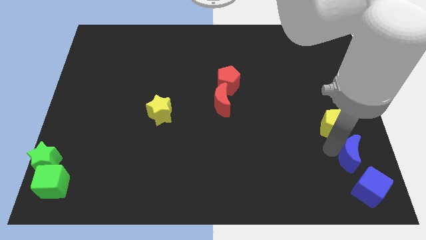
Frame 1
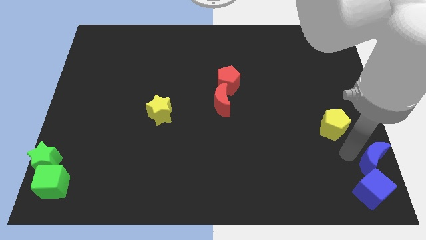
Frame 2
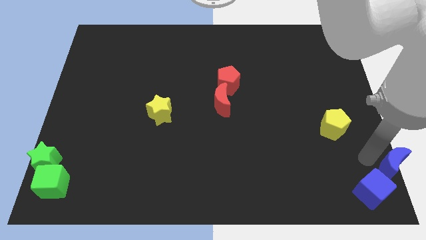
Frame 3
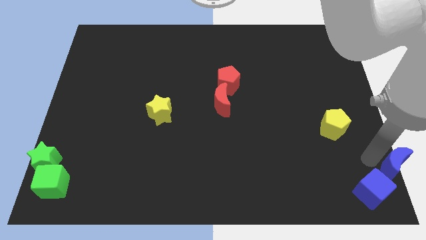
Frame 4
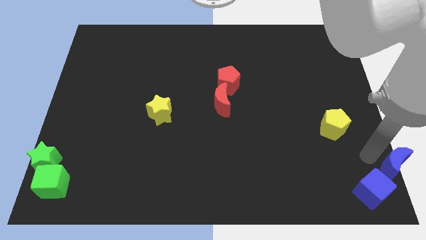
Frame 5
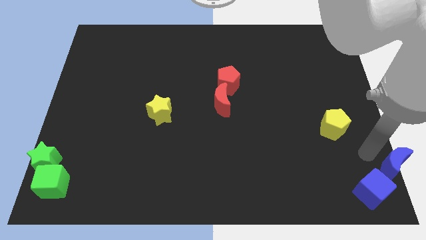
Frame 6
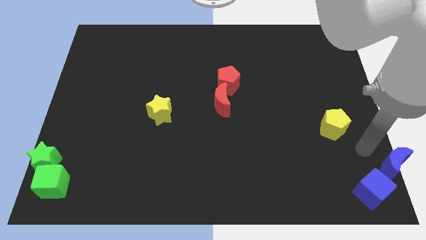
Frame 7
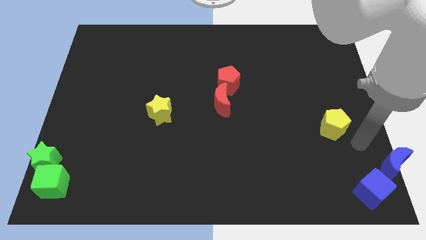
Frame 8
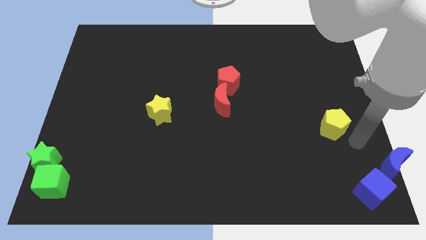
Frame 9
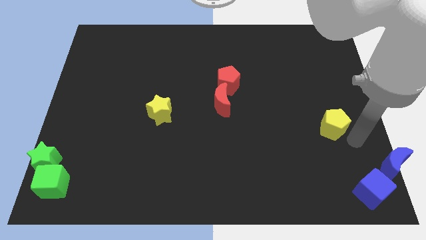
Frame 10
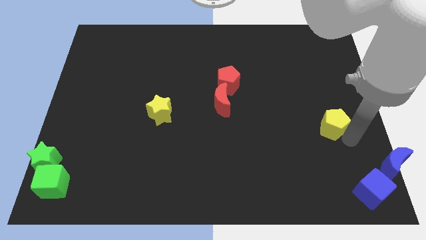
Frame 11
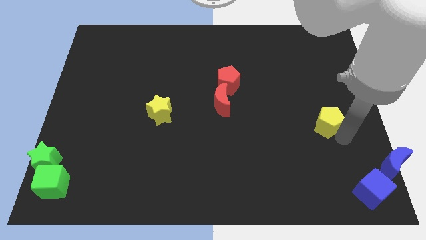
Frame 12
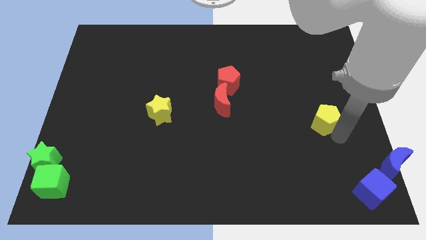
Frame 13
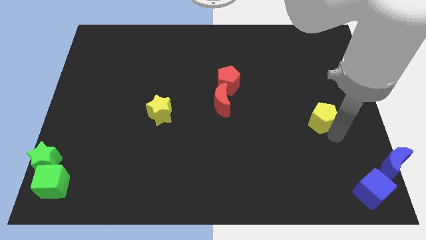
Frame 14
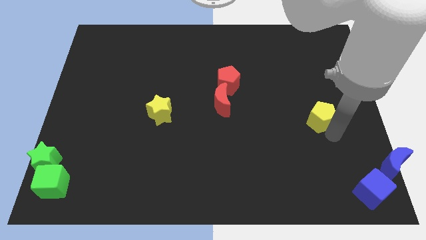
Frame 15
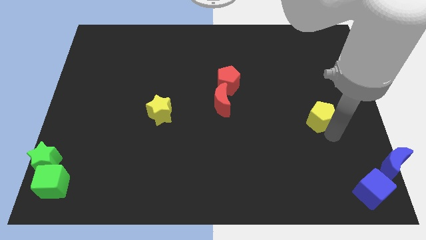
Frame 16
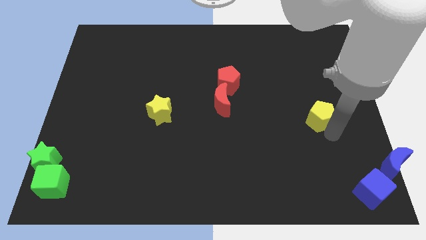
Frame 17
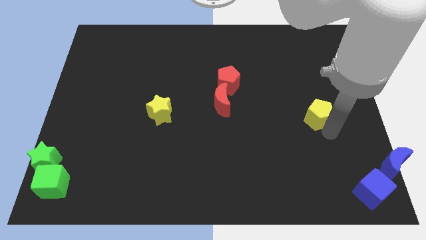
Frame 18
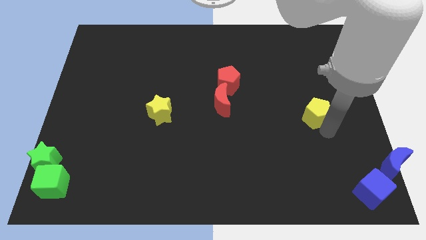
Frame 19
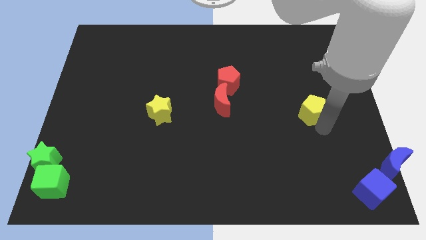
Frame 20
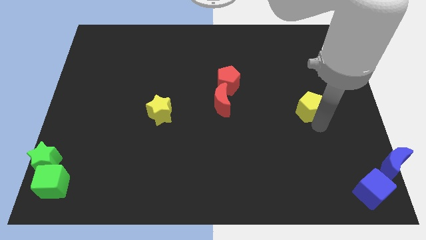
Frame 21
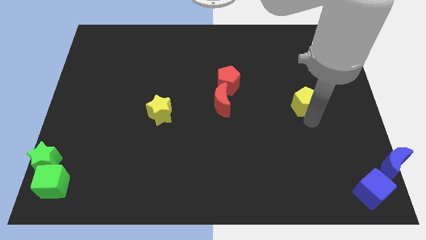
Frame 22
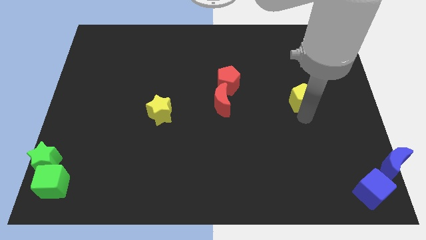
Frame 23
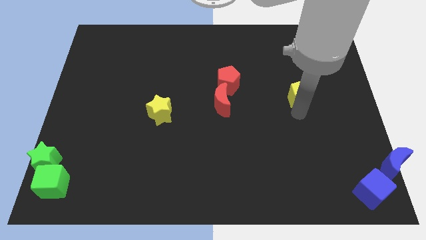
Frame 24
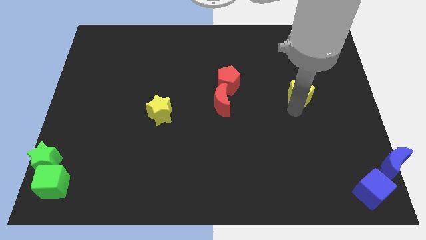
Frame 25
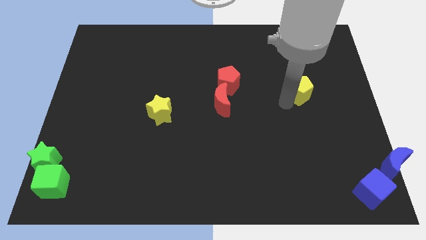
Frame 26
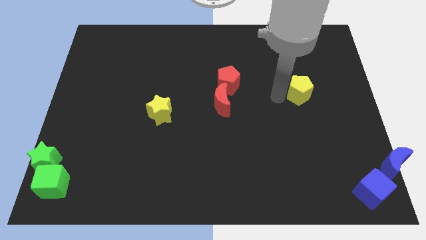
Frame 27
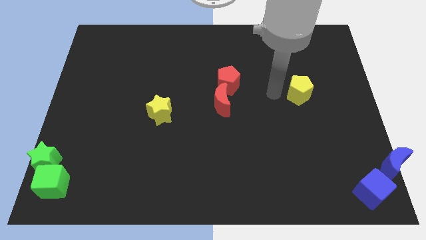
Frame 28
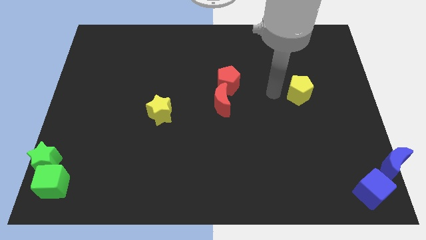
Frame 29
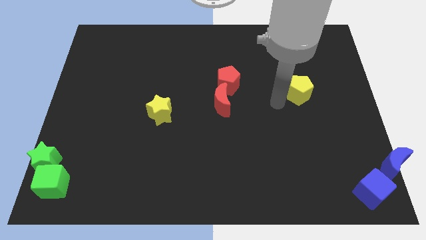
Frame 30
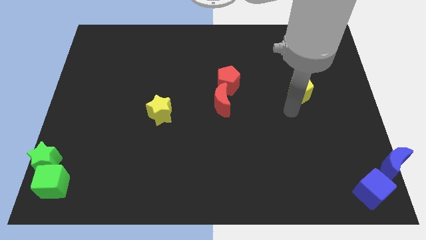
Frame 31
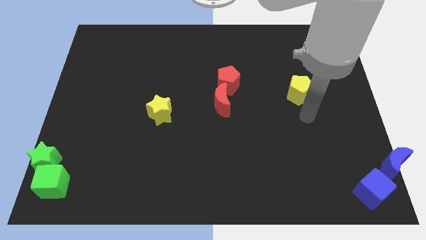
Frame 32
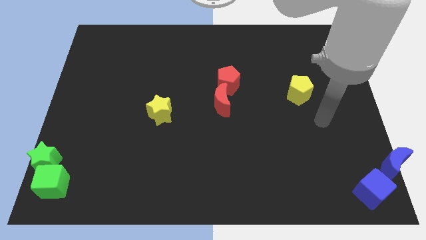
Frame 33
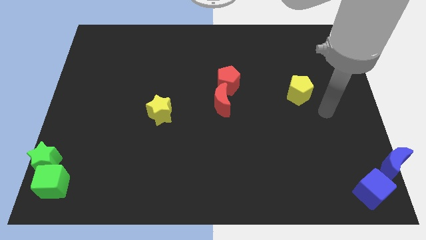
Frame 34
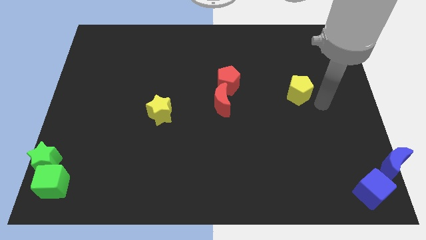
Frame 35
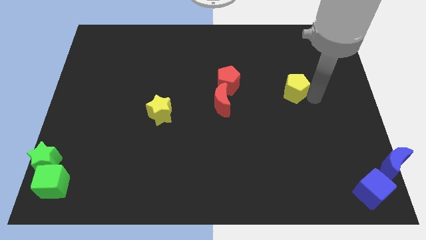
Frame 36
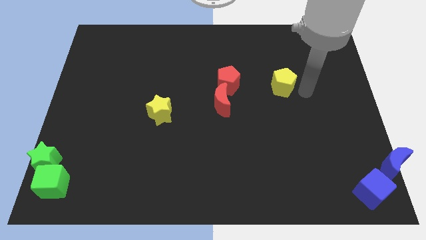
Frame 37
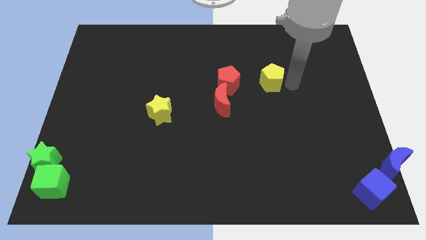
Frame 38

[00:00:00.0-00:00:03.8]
place the yellow pentagon parallel to red pentagon

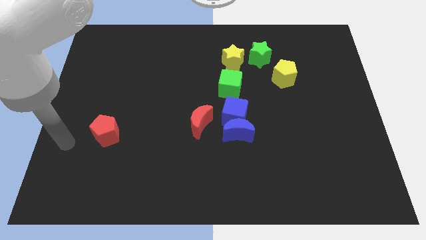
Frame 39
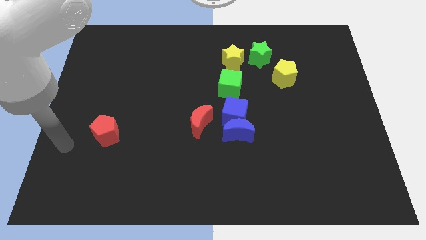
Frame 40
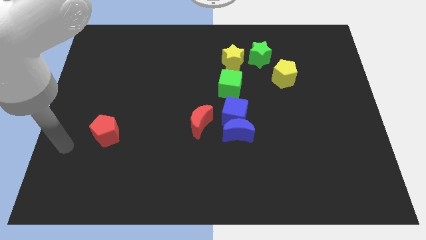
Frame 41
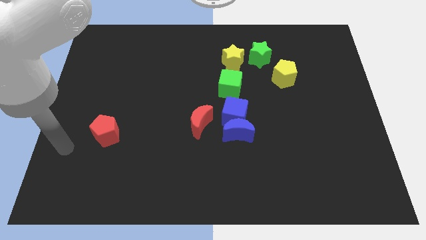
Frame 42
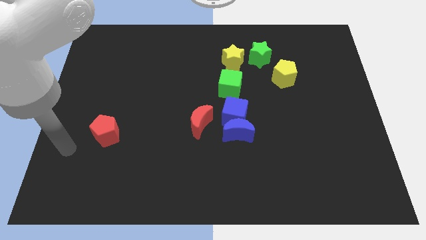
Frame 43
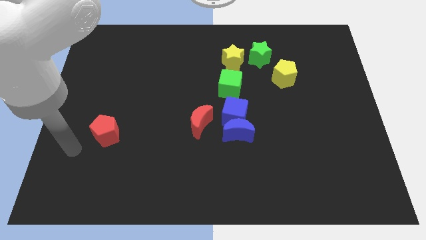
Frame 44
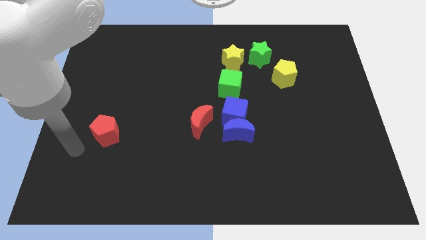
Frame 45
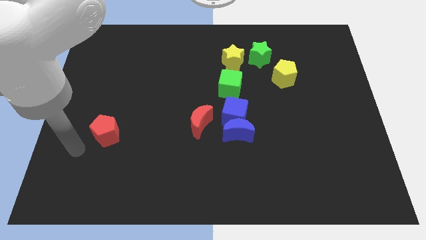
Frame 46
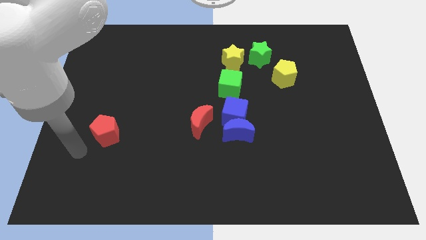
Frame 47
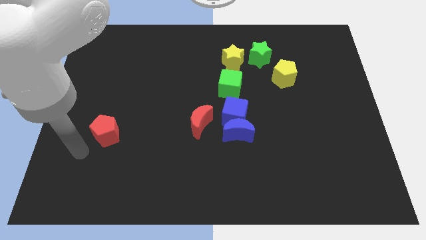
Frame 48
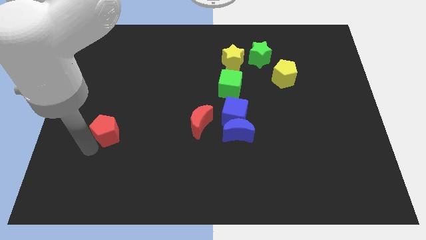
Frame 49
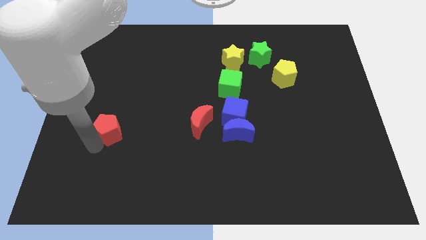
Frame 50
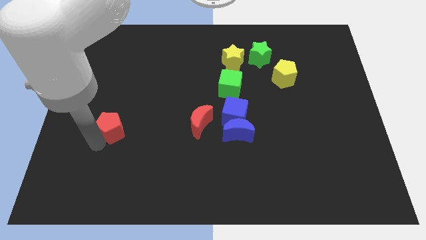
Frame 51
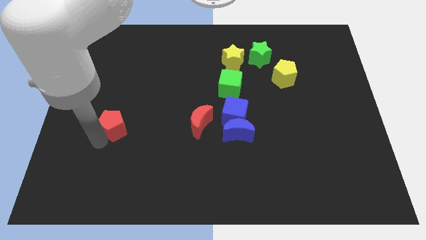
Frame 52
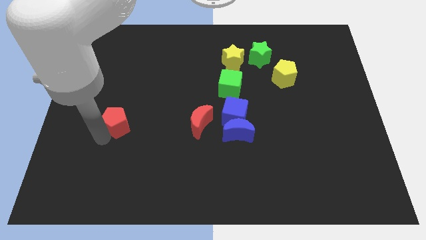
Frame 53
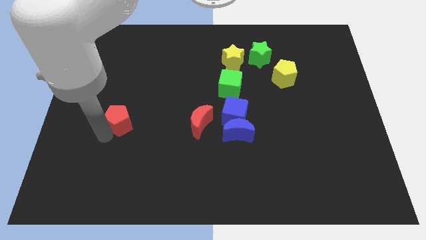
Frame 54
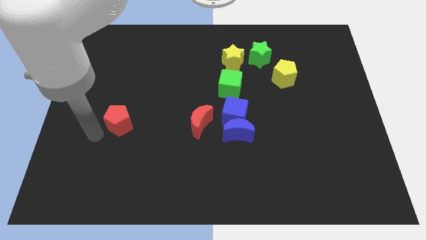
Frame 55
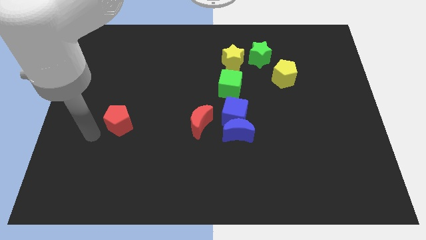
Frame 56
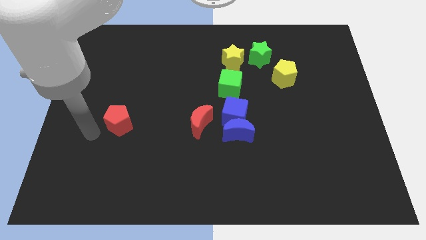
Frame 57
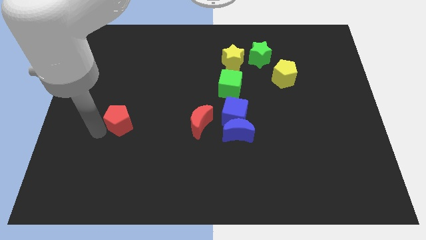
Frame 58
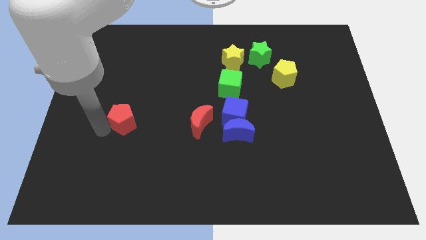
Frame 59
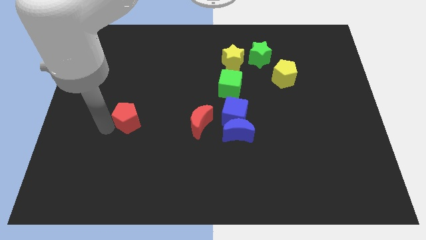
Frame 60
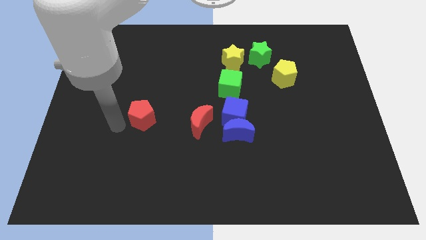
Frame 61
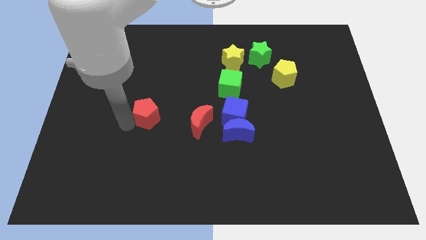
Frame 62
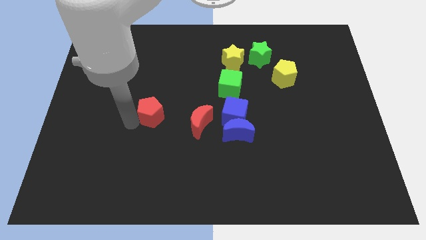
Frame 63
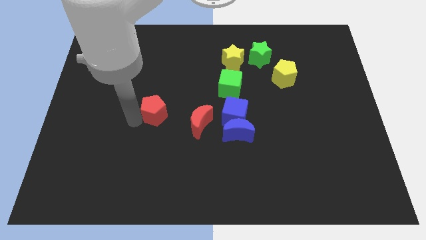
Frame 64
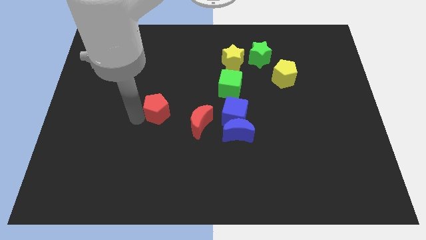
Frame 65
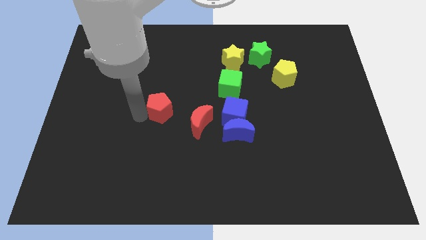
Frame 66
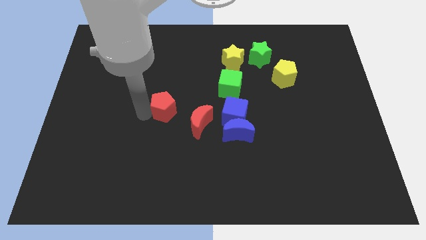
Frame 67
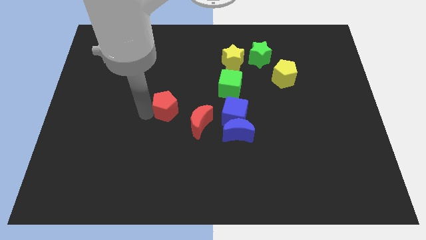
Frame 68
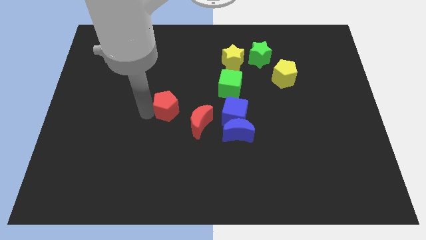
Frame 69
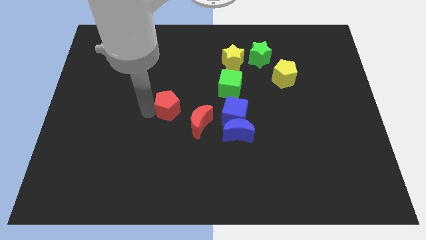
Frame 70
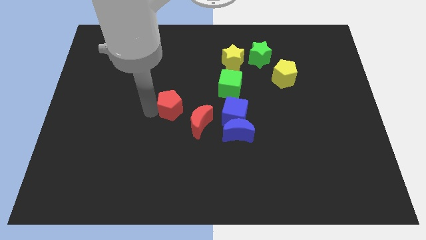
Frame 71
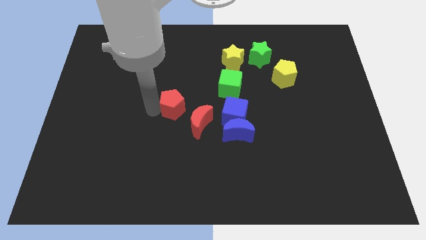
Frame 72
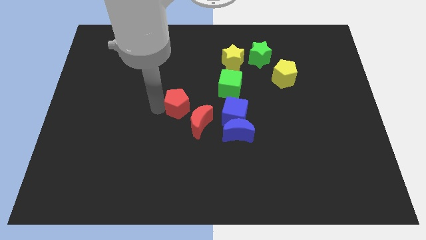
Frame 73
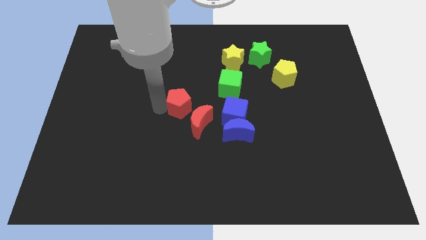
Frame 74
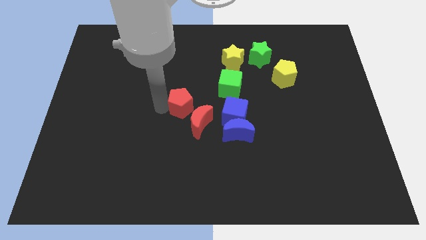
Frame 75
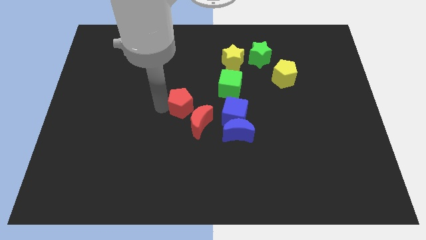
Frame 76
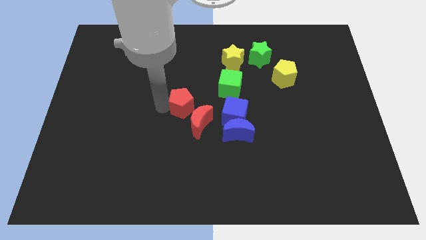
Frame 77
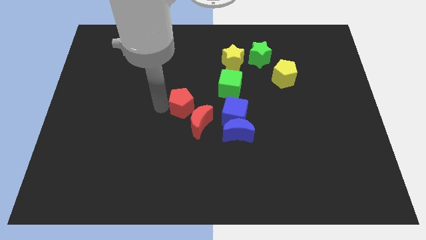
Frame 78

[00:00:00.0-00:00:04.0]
move the red pentagon to the top left of the red crescent

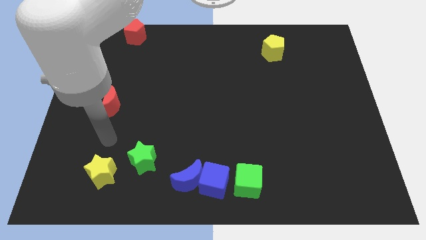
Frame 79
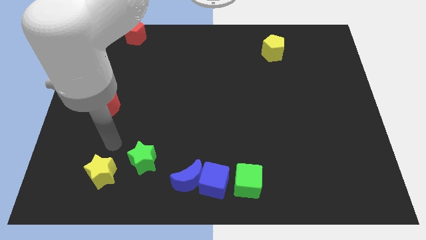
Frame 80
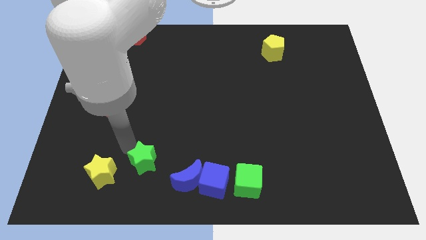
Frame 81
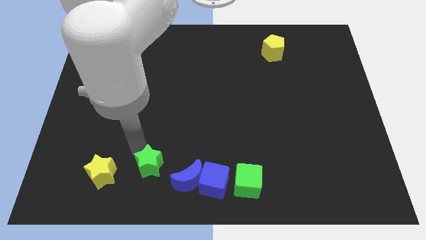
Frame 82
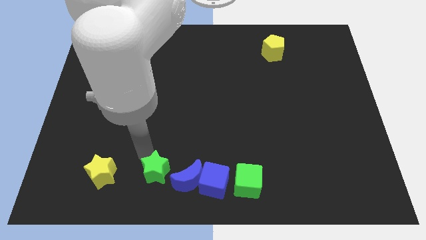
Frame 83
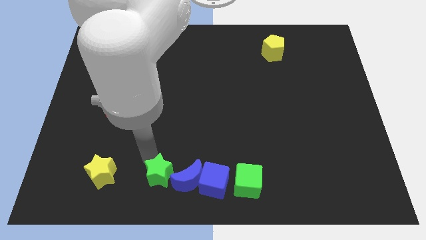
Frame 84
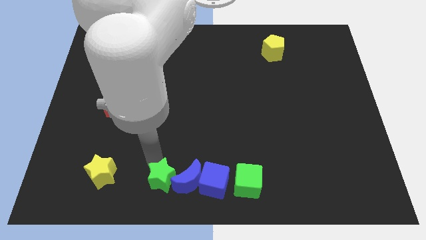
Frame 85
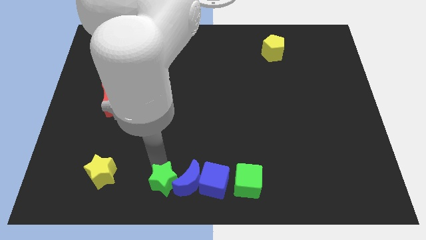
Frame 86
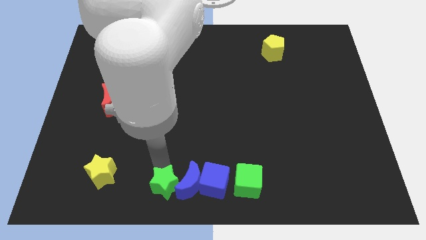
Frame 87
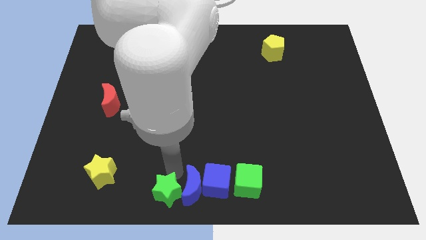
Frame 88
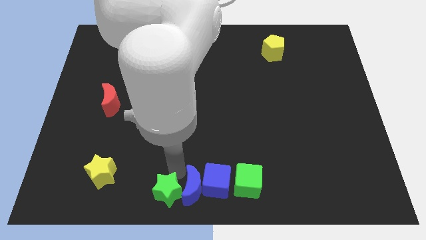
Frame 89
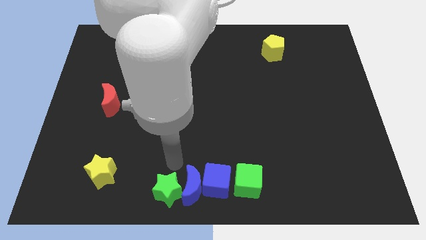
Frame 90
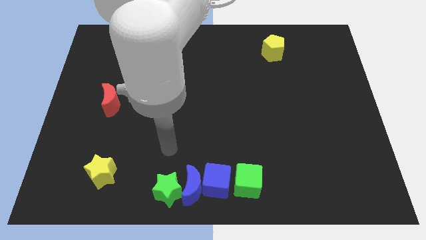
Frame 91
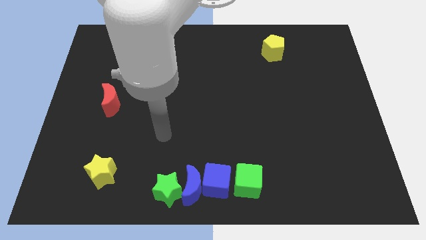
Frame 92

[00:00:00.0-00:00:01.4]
push the green star into the blue moon
